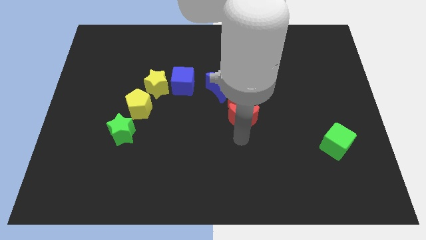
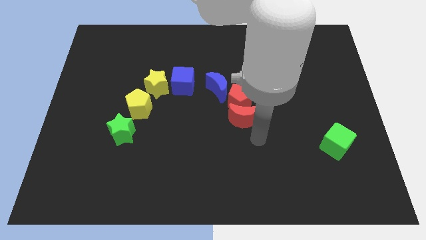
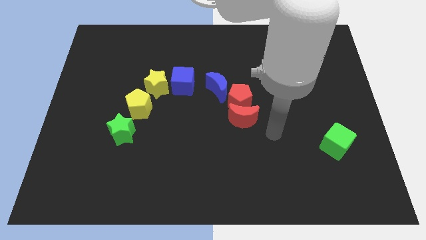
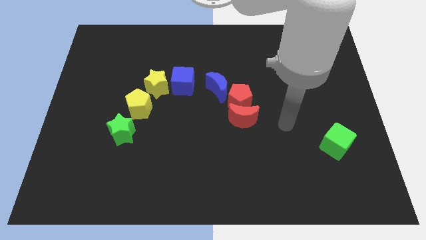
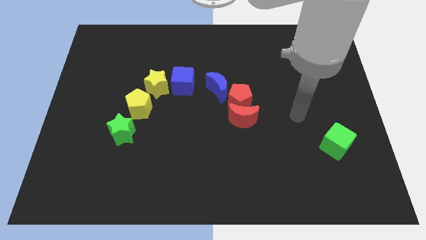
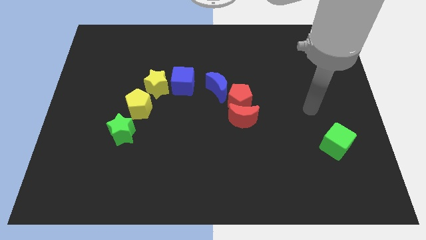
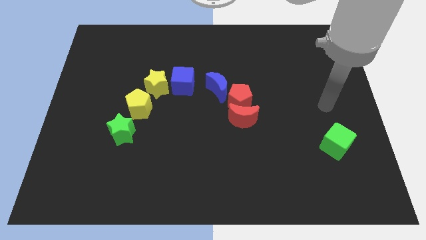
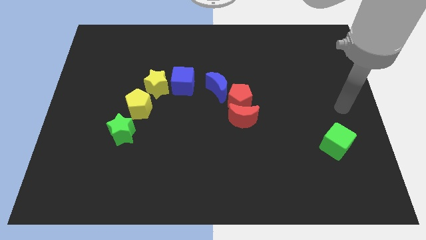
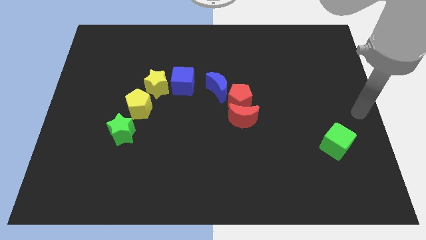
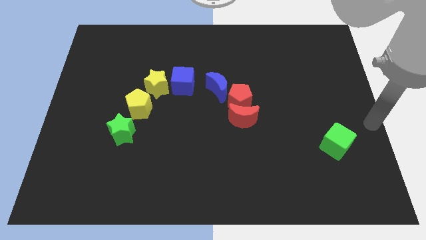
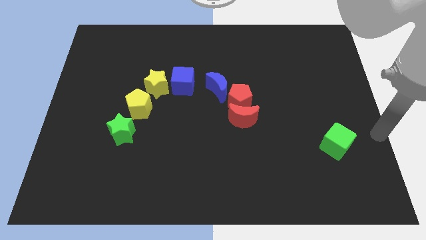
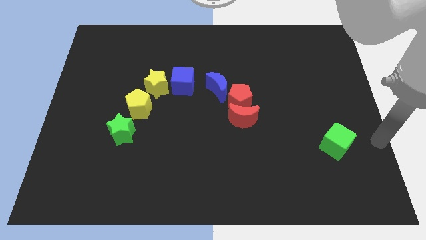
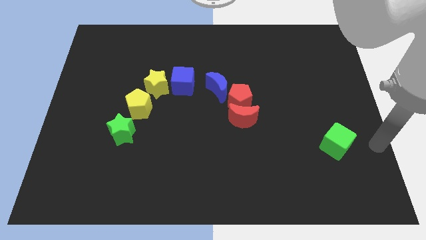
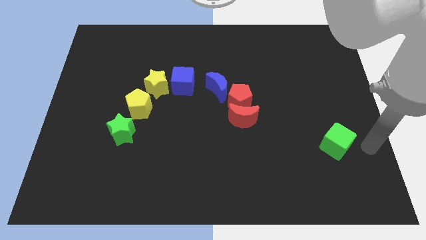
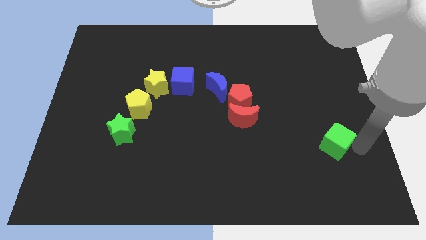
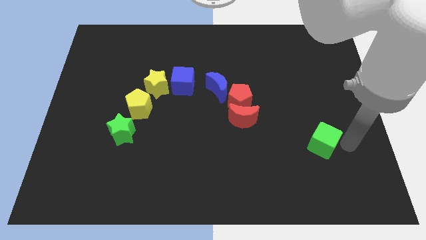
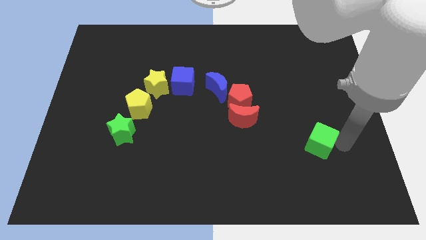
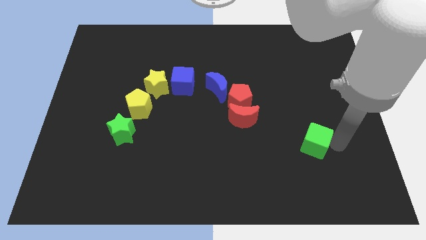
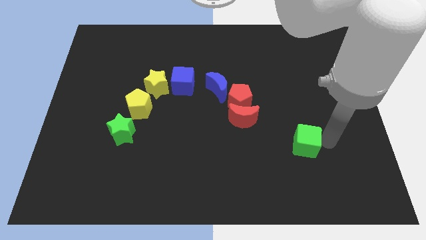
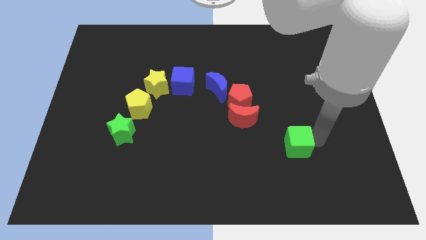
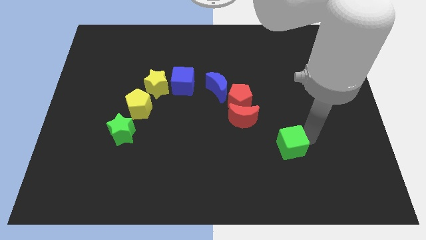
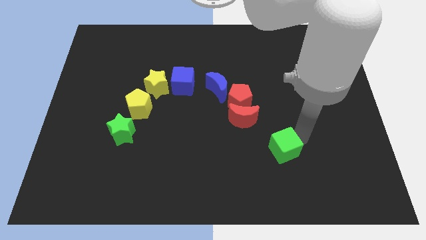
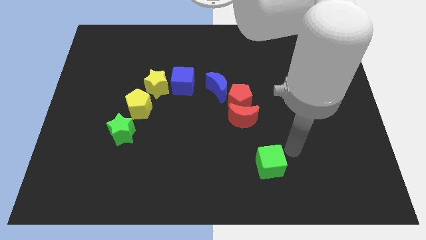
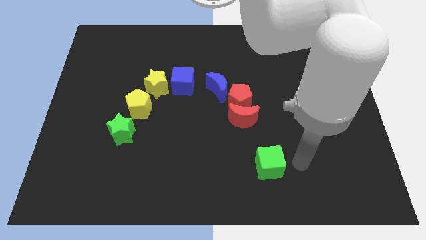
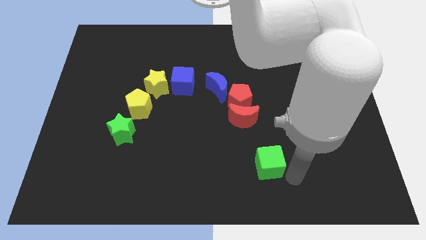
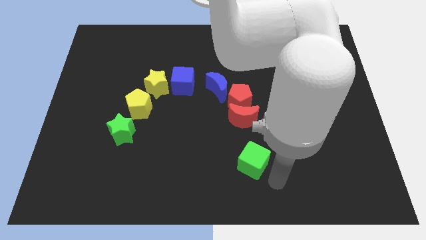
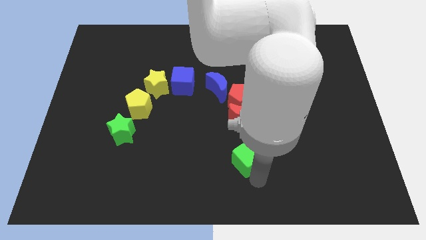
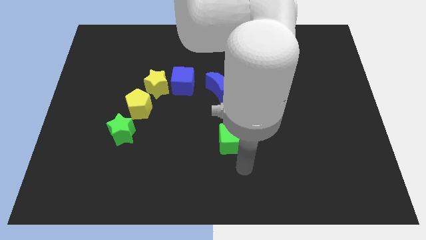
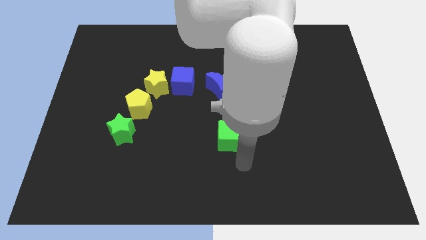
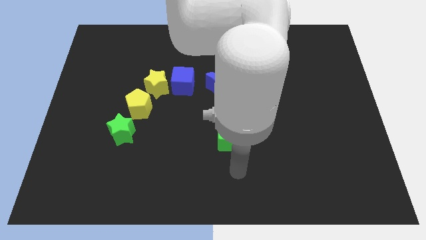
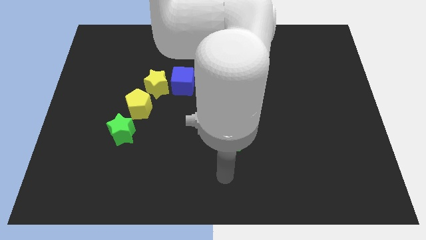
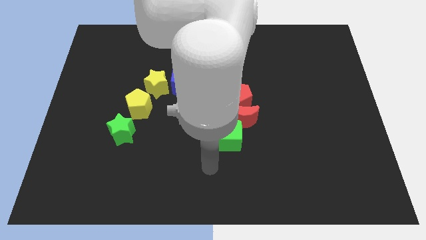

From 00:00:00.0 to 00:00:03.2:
push the green cube below the red crescent

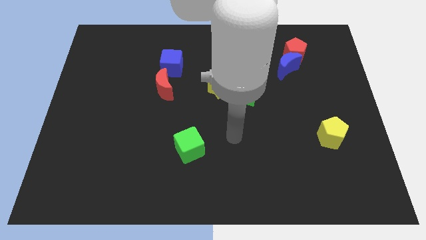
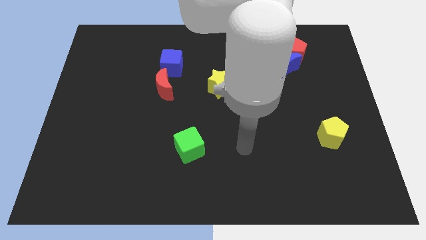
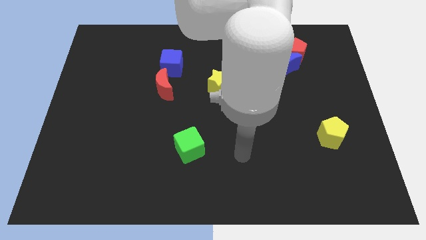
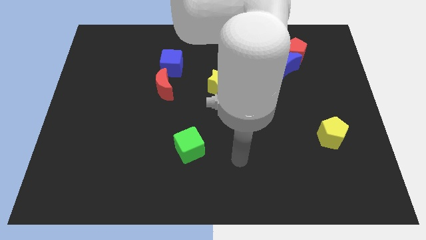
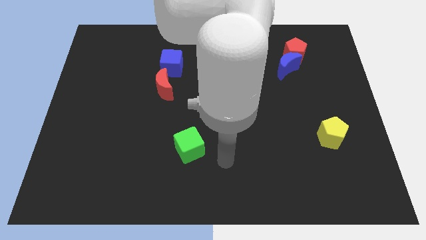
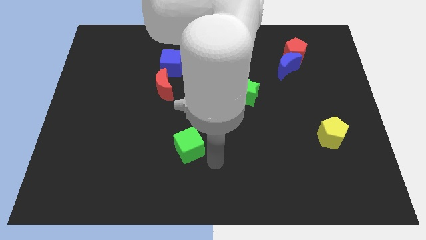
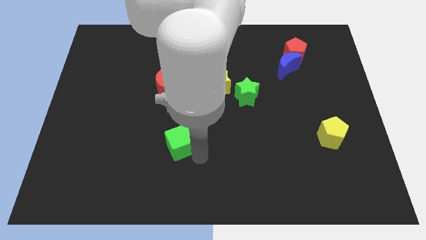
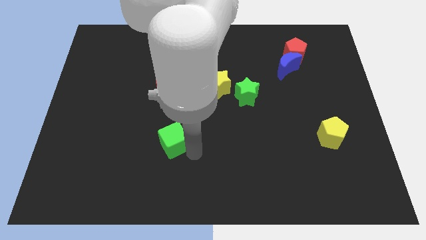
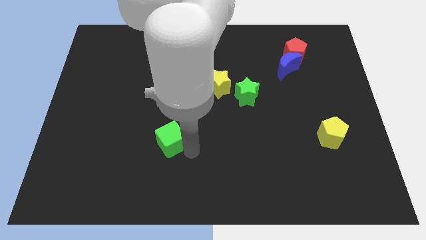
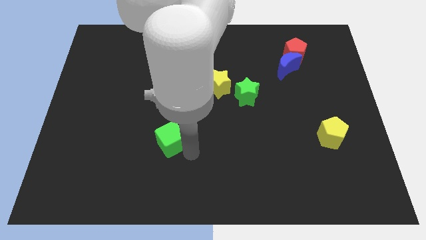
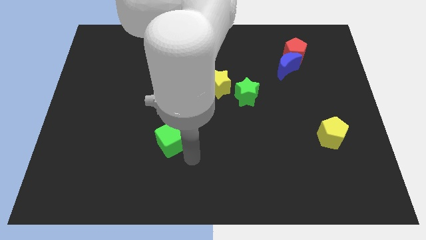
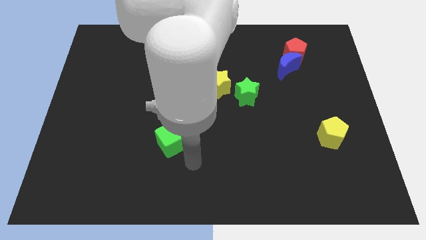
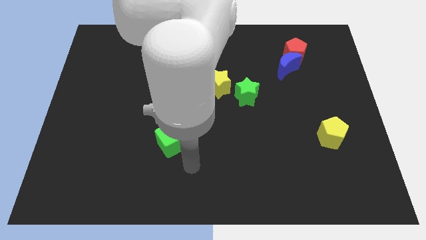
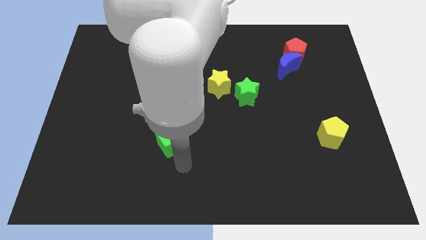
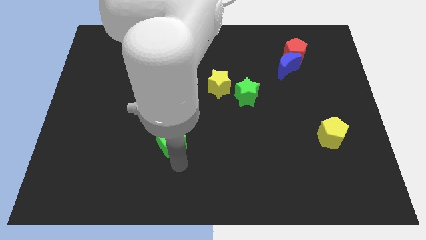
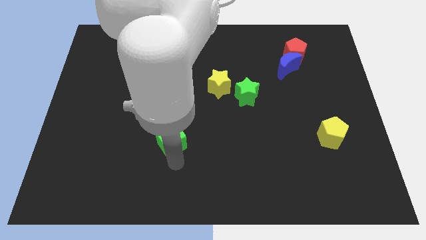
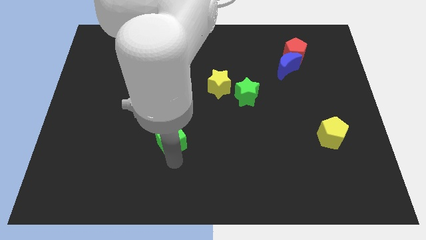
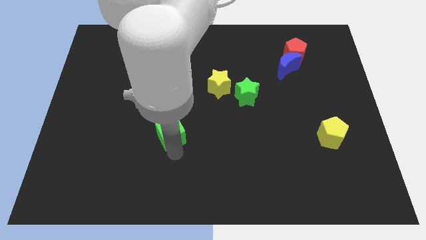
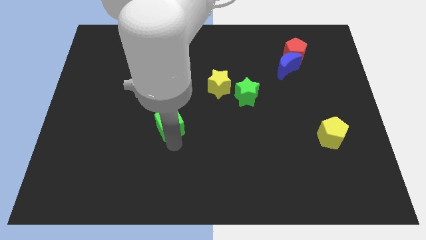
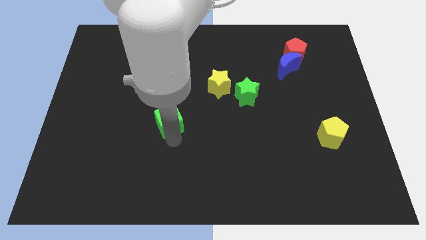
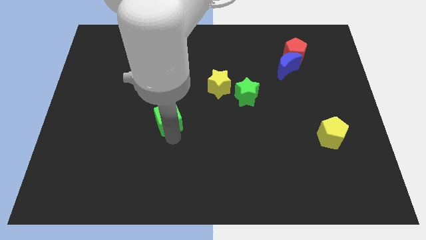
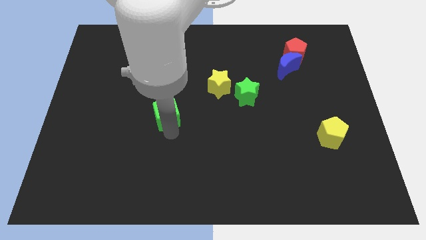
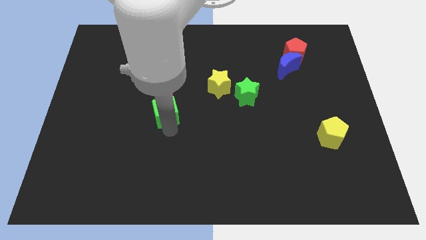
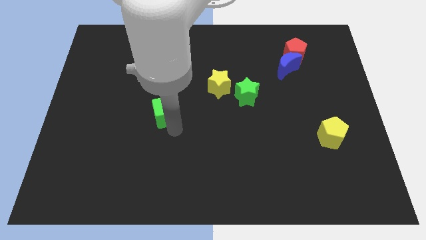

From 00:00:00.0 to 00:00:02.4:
adjust the green block in a vertical line towards the bottom side of the red crescent

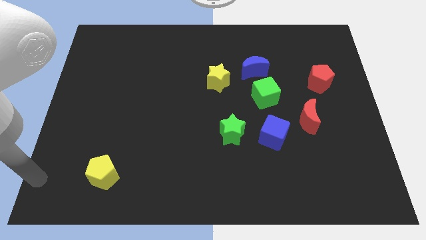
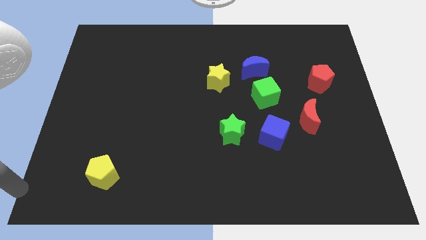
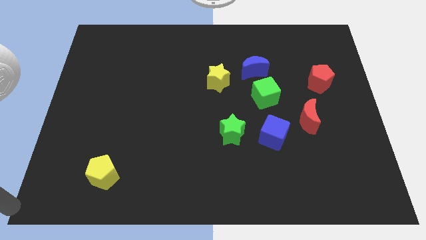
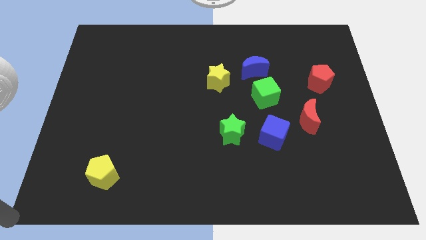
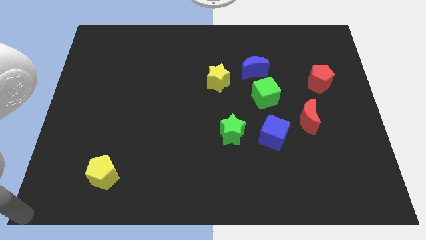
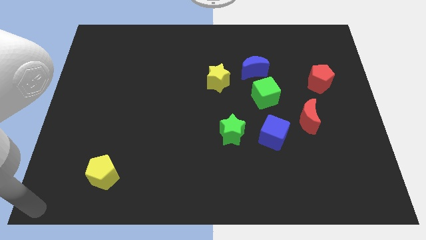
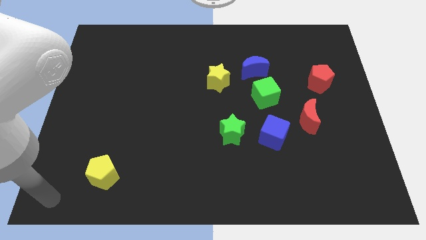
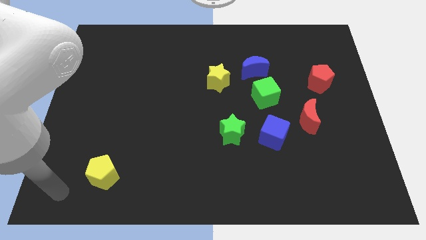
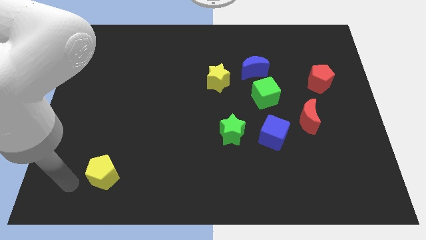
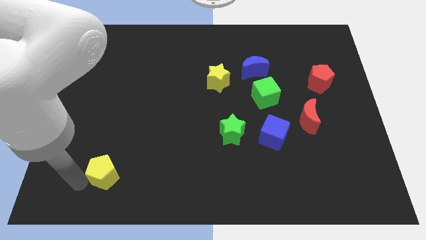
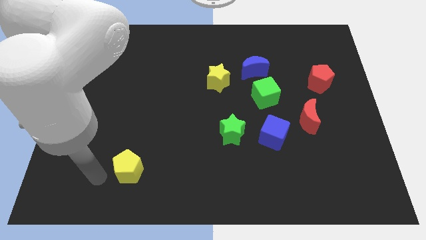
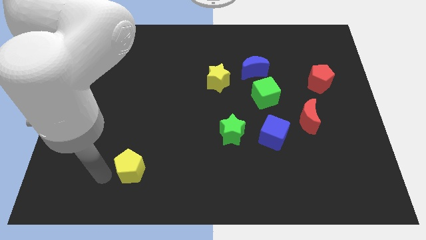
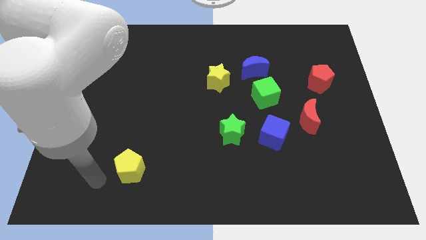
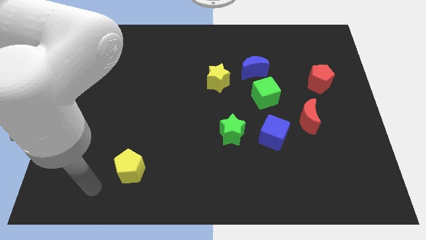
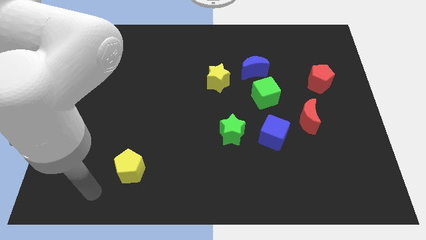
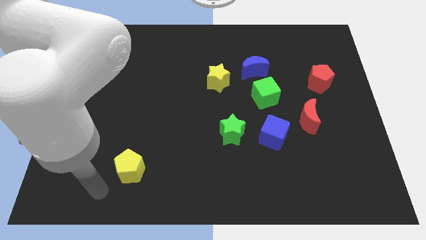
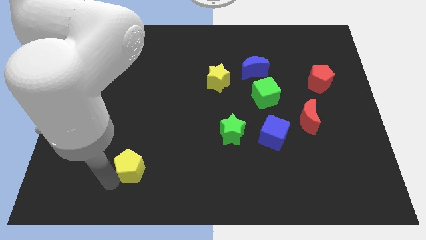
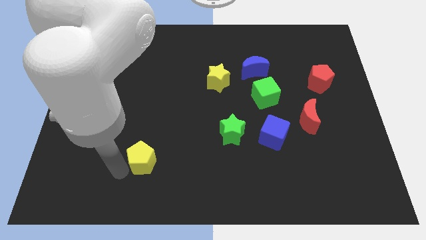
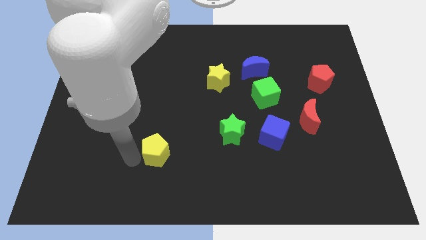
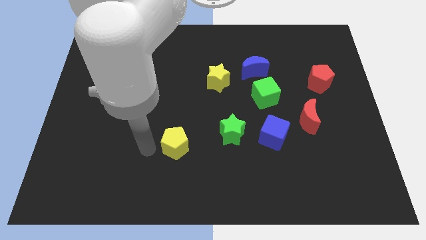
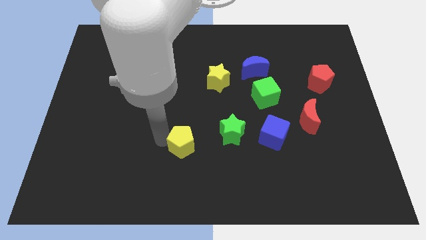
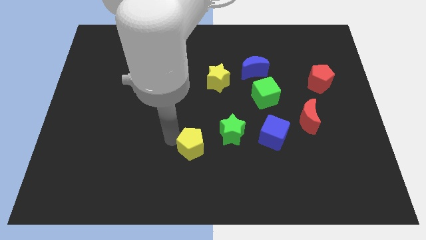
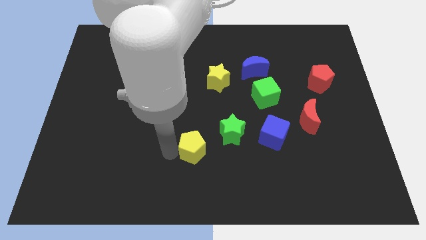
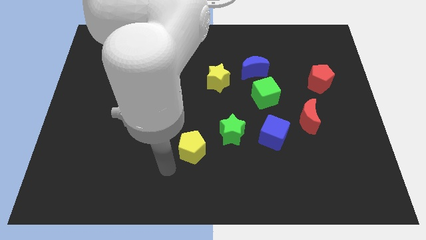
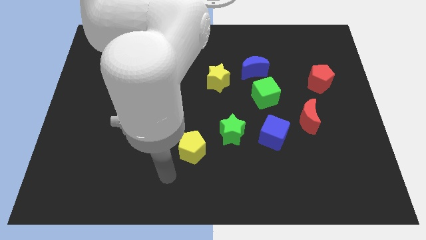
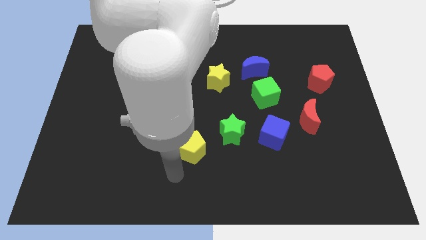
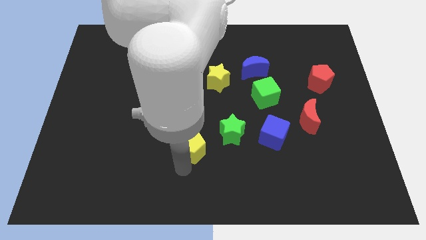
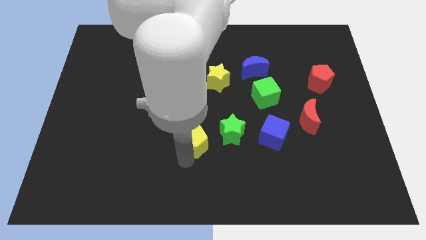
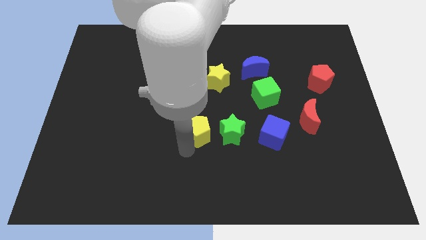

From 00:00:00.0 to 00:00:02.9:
push yellow pentagon beside green star

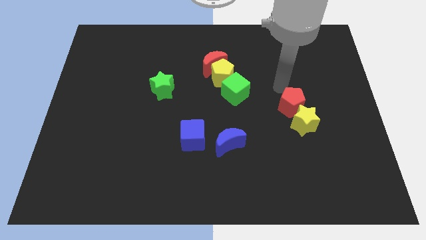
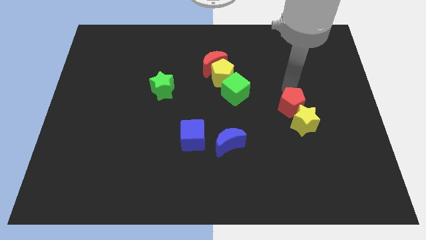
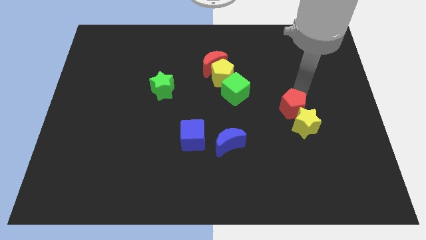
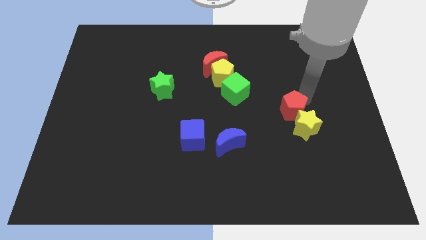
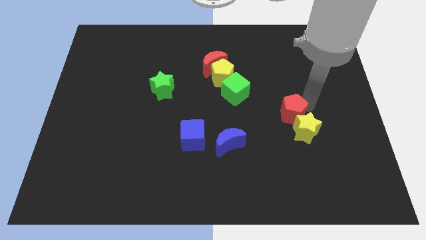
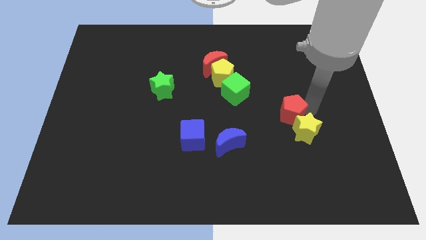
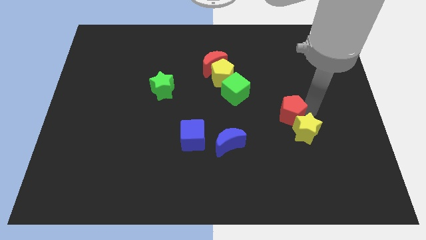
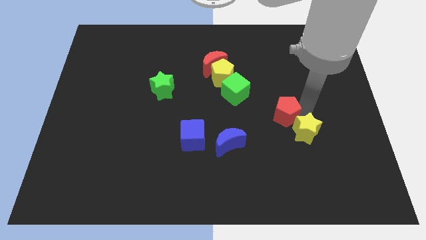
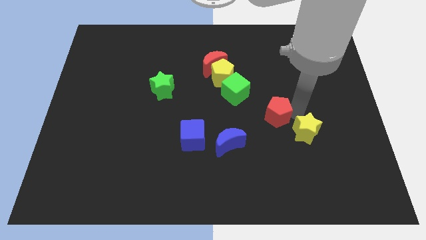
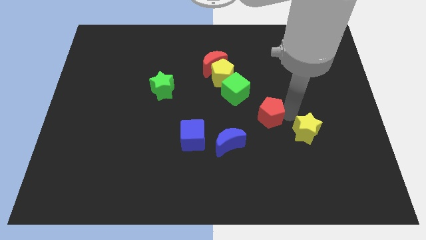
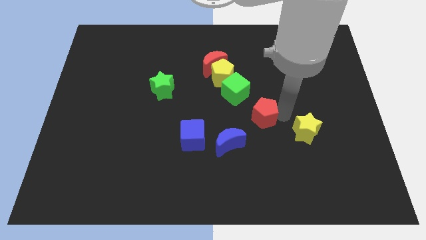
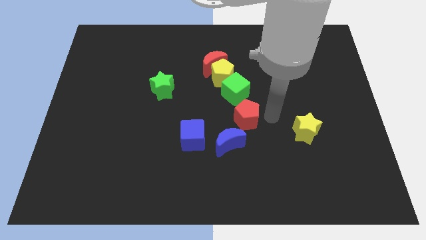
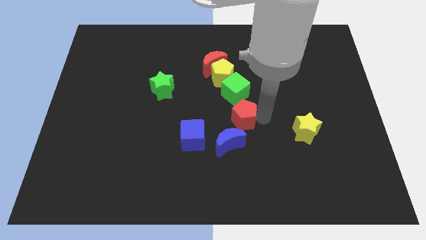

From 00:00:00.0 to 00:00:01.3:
move the red pentagon away from the yellow star
